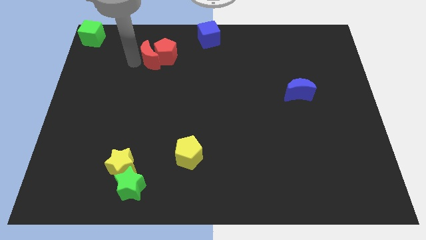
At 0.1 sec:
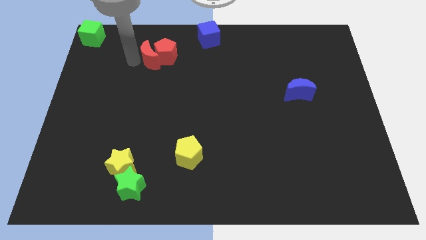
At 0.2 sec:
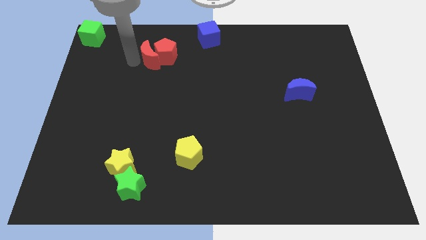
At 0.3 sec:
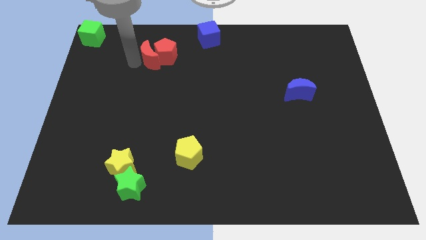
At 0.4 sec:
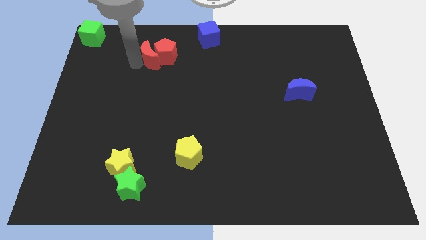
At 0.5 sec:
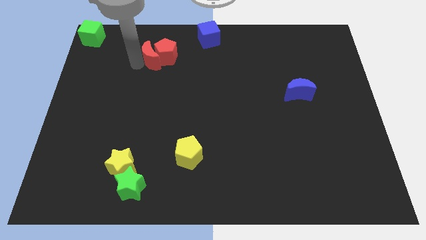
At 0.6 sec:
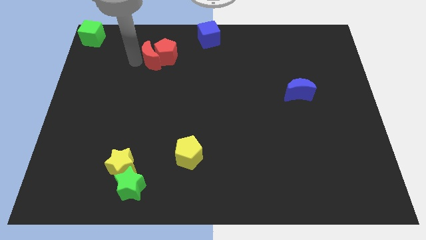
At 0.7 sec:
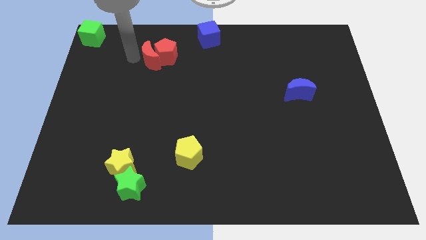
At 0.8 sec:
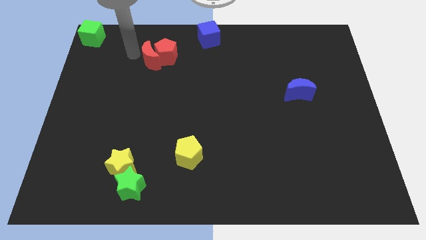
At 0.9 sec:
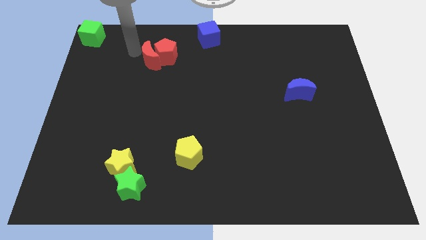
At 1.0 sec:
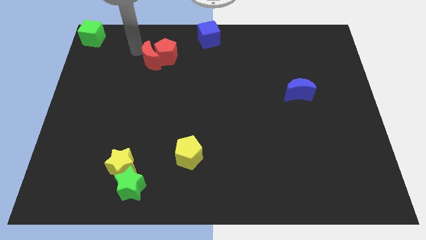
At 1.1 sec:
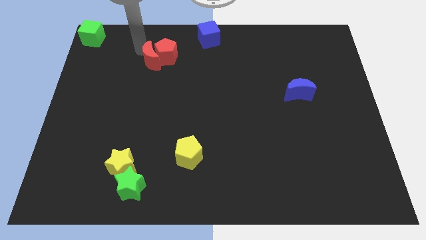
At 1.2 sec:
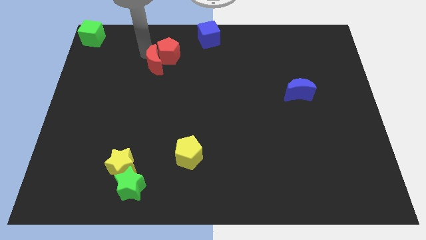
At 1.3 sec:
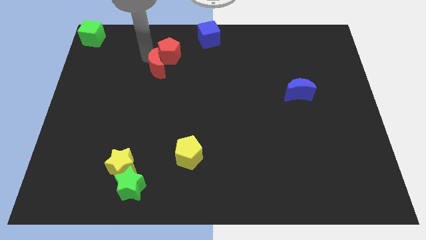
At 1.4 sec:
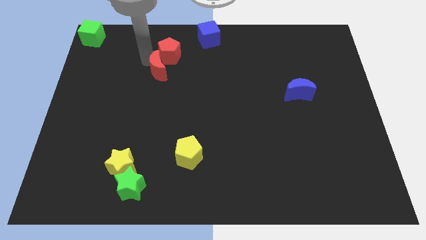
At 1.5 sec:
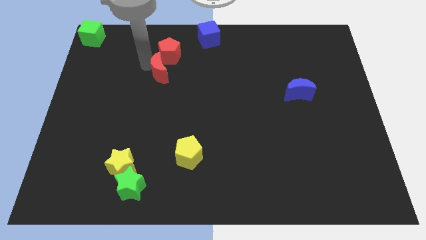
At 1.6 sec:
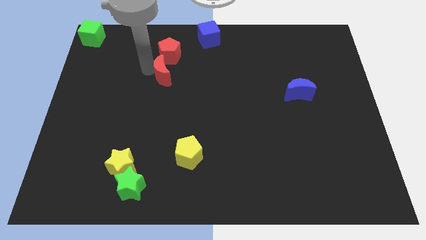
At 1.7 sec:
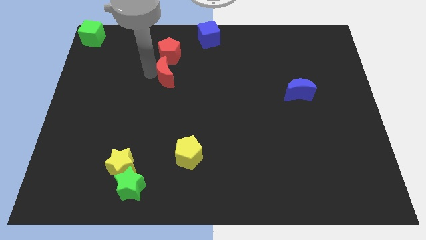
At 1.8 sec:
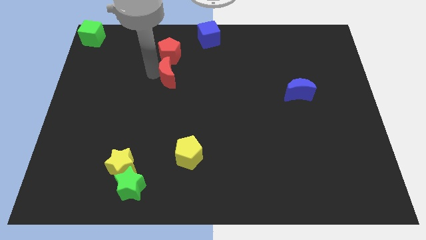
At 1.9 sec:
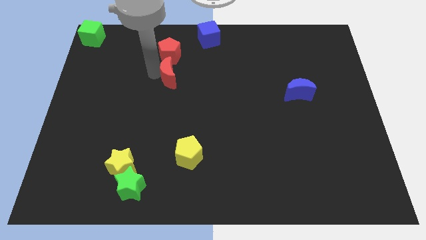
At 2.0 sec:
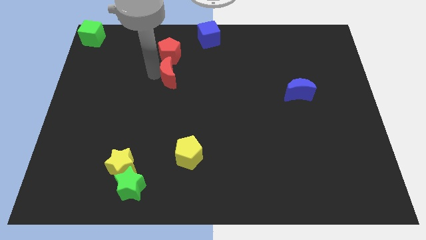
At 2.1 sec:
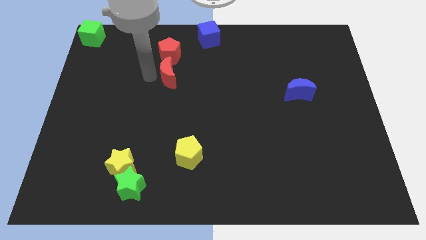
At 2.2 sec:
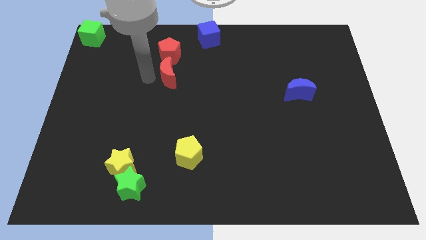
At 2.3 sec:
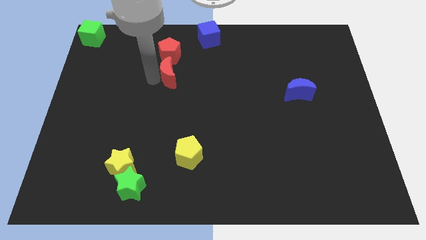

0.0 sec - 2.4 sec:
put the red moon below the red pentagon

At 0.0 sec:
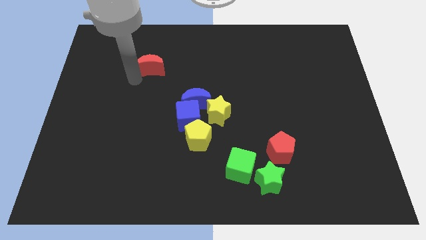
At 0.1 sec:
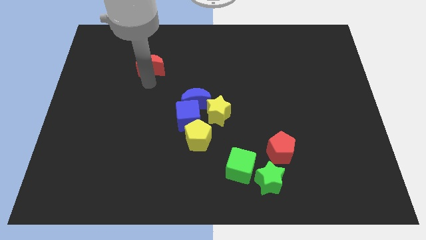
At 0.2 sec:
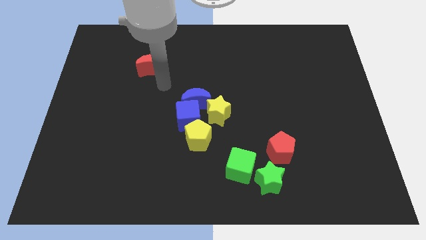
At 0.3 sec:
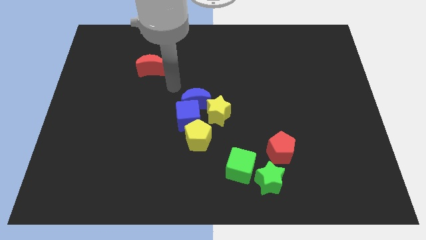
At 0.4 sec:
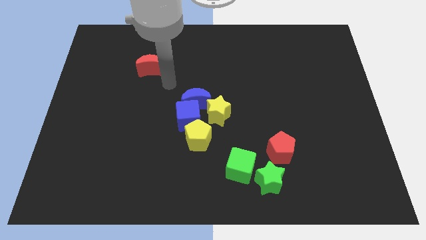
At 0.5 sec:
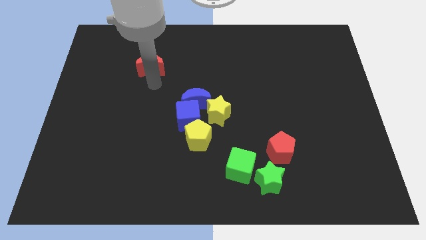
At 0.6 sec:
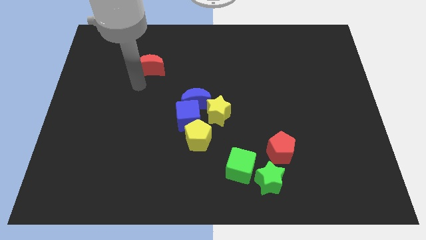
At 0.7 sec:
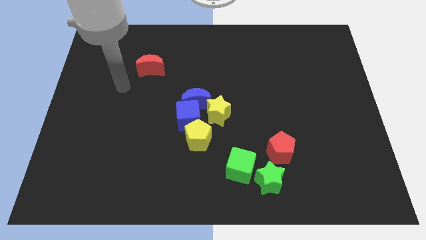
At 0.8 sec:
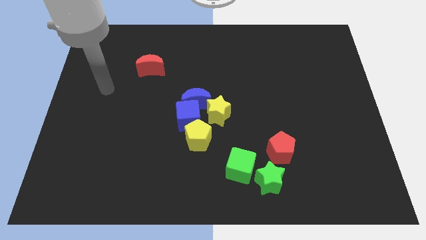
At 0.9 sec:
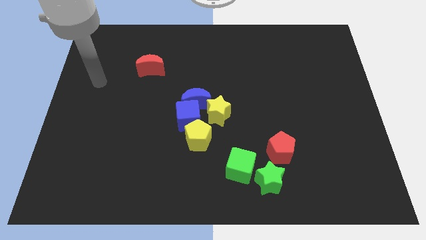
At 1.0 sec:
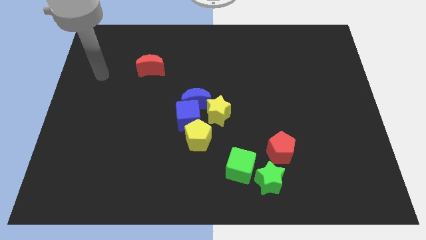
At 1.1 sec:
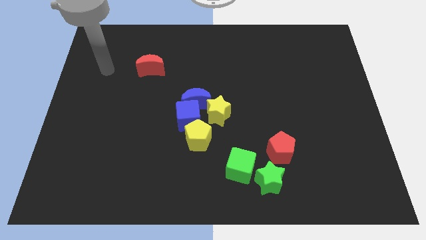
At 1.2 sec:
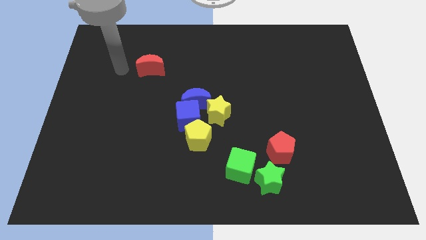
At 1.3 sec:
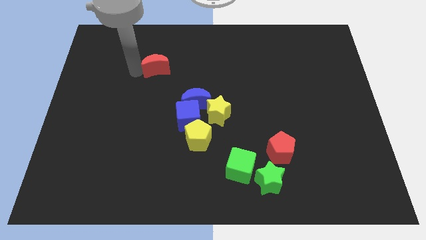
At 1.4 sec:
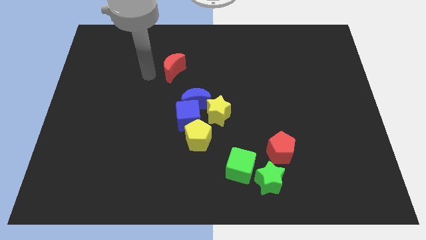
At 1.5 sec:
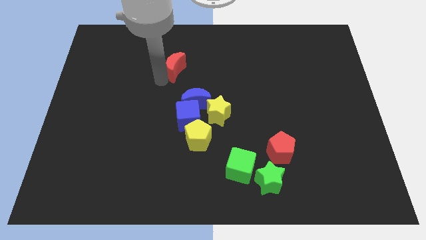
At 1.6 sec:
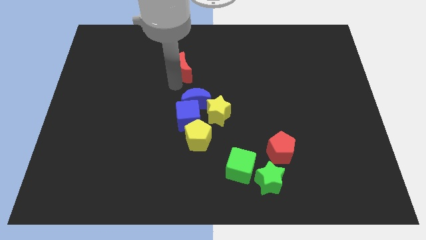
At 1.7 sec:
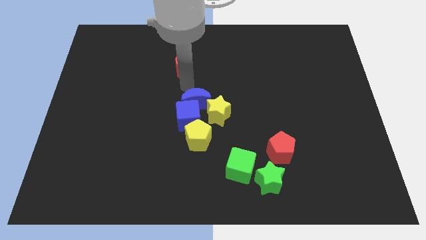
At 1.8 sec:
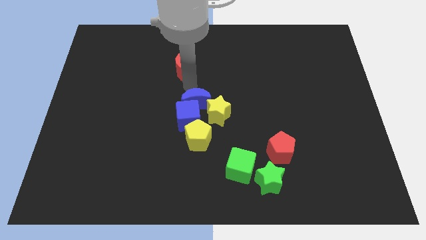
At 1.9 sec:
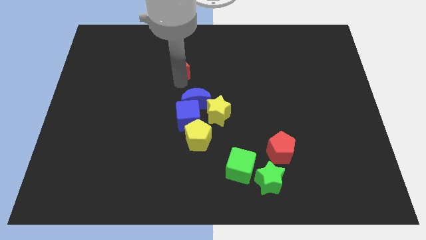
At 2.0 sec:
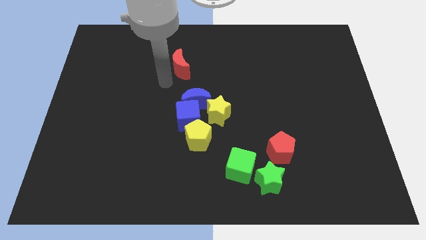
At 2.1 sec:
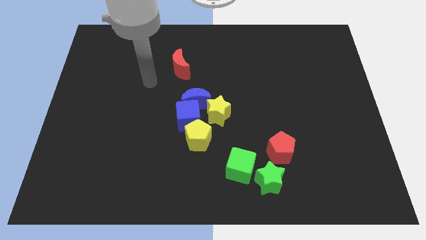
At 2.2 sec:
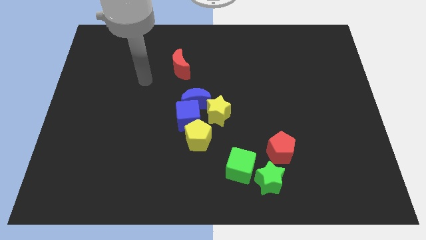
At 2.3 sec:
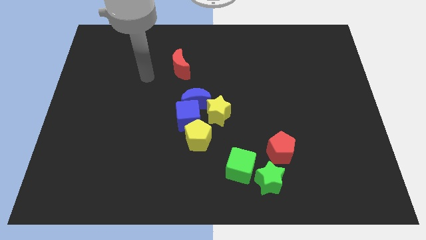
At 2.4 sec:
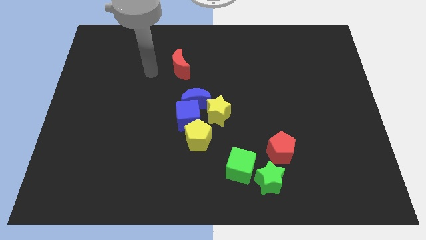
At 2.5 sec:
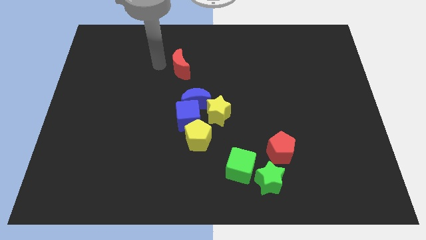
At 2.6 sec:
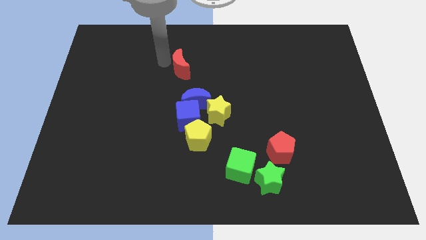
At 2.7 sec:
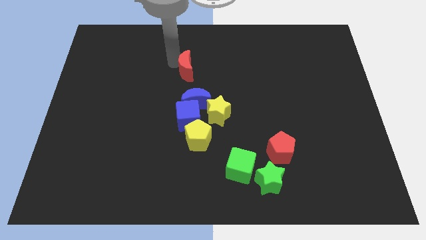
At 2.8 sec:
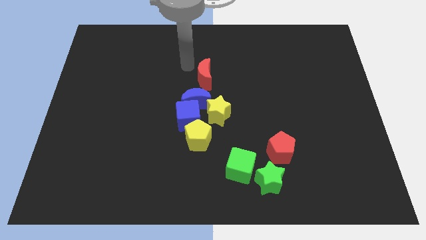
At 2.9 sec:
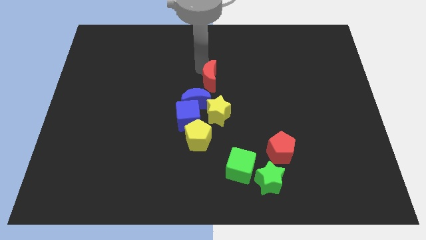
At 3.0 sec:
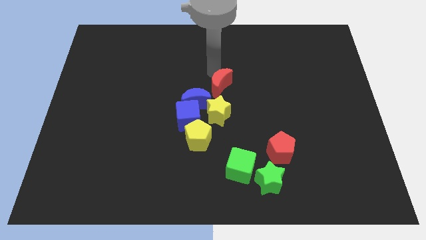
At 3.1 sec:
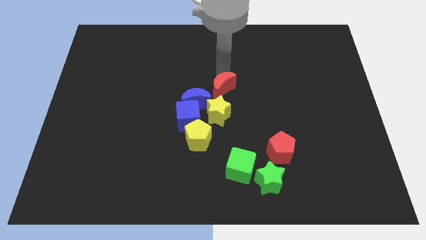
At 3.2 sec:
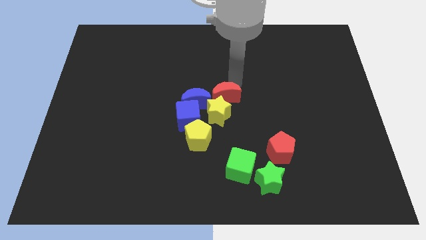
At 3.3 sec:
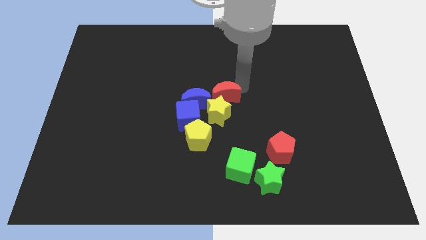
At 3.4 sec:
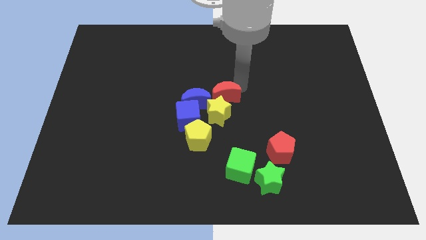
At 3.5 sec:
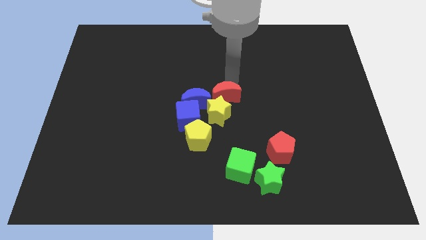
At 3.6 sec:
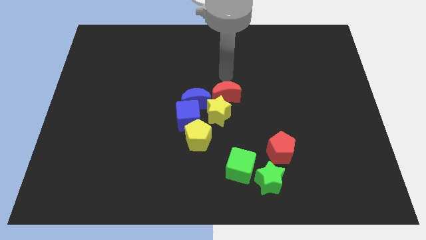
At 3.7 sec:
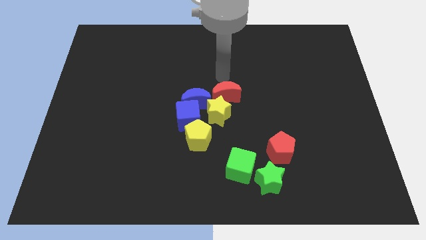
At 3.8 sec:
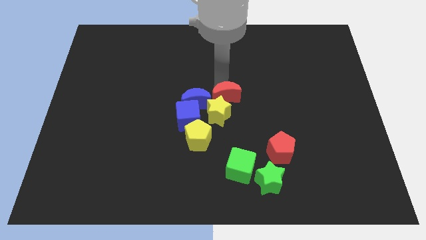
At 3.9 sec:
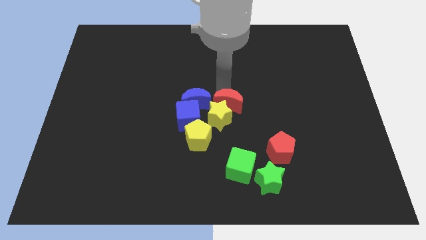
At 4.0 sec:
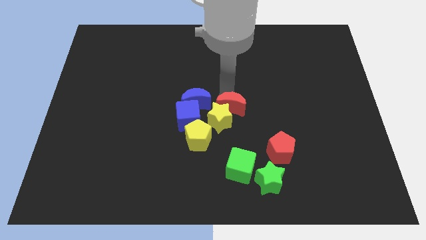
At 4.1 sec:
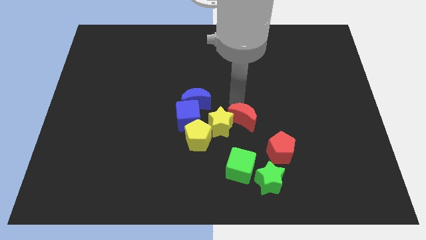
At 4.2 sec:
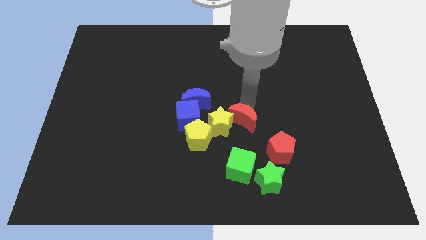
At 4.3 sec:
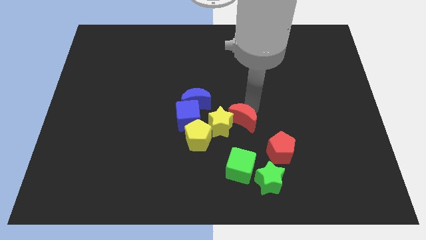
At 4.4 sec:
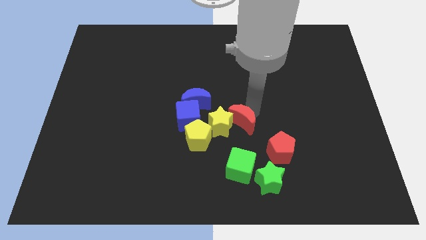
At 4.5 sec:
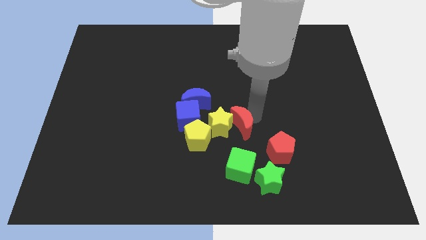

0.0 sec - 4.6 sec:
drag the red moon at the top of the green cube

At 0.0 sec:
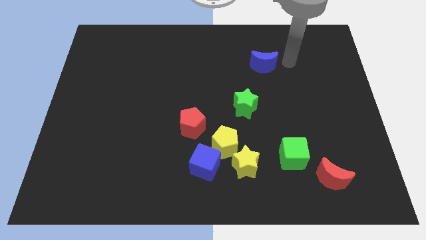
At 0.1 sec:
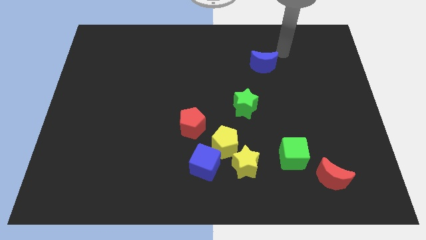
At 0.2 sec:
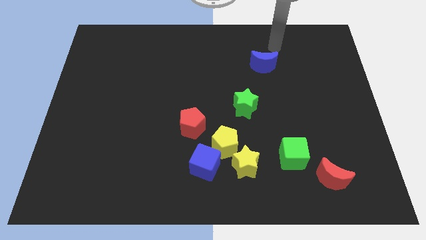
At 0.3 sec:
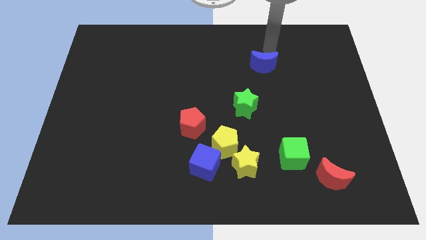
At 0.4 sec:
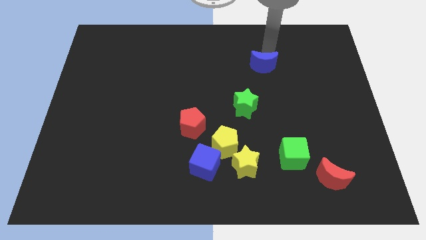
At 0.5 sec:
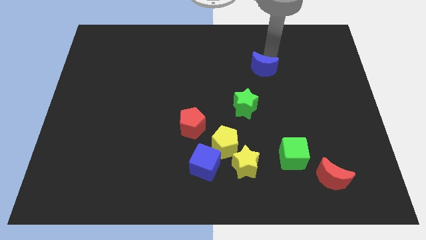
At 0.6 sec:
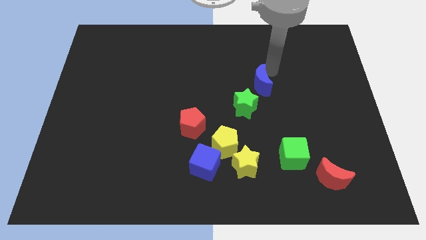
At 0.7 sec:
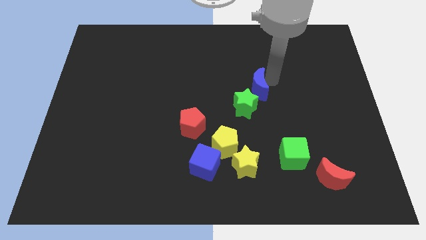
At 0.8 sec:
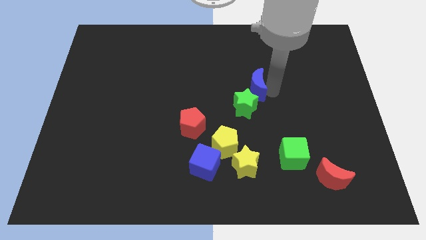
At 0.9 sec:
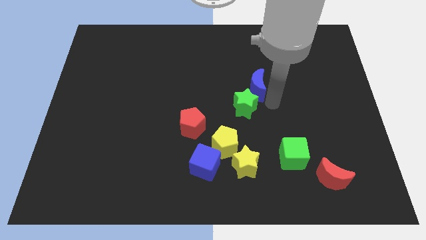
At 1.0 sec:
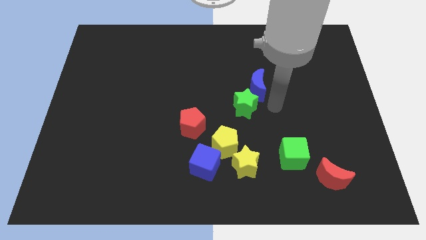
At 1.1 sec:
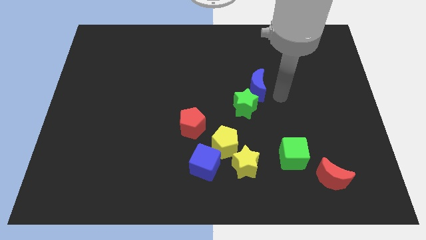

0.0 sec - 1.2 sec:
place blue moon to the top right of the green star

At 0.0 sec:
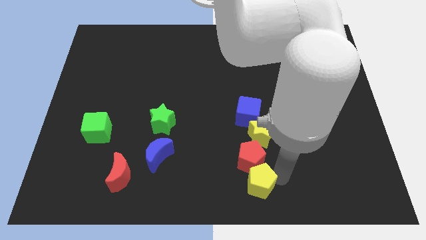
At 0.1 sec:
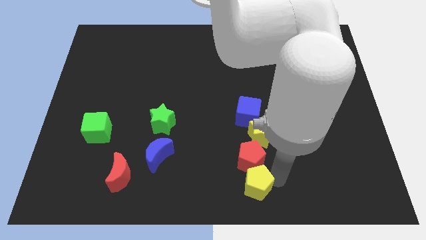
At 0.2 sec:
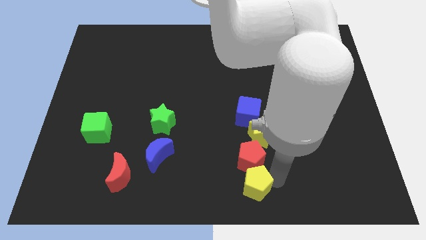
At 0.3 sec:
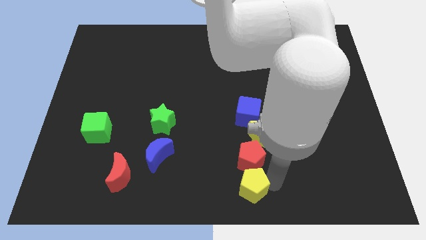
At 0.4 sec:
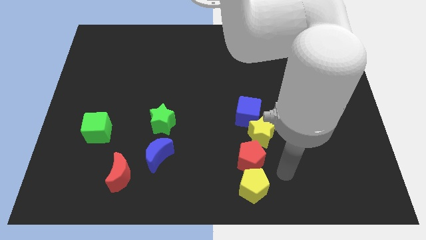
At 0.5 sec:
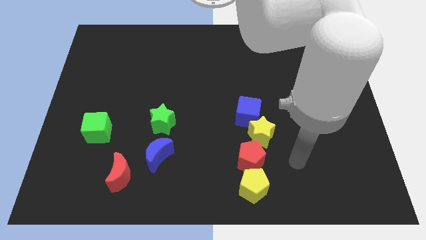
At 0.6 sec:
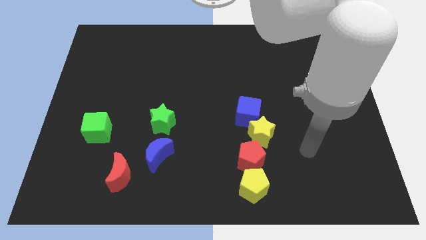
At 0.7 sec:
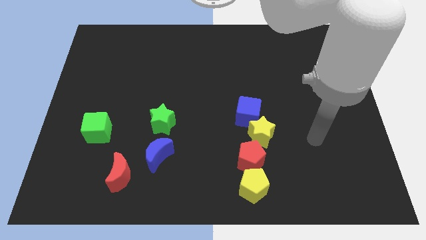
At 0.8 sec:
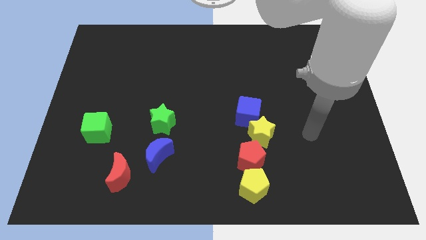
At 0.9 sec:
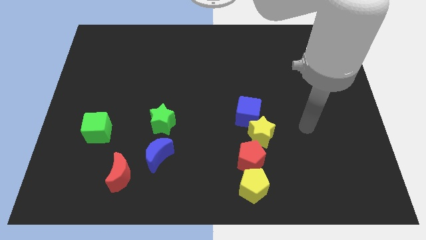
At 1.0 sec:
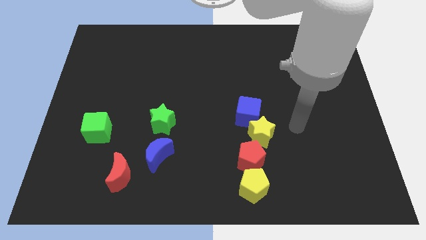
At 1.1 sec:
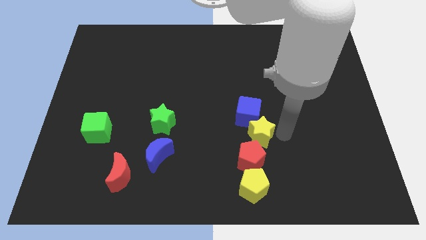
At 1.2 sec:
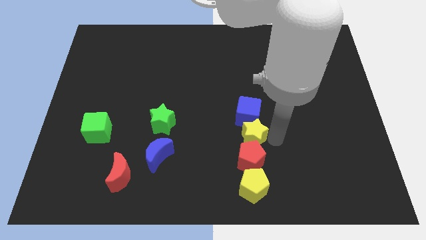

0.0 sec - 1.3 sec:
adjust the places of yellow star and yellow pentagon to form a vertical line
